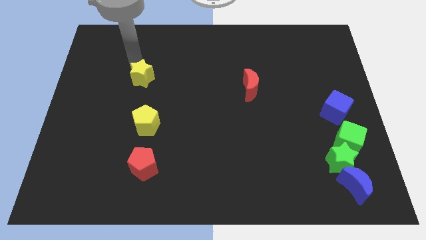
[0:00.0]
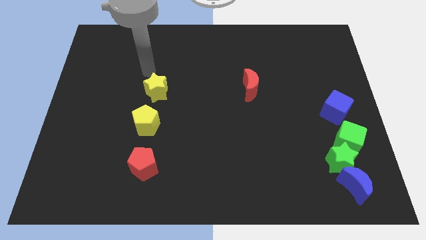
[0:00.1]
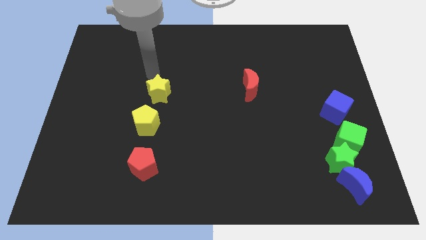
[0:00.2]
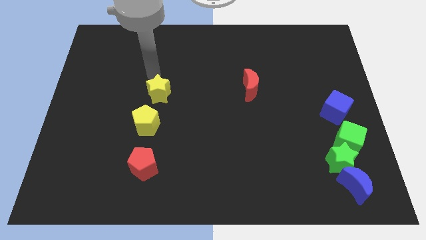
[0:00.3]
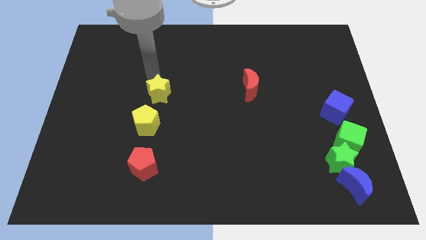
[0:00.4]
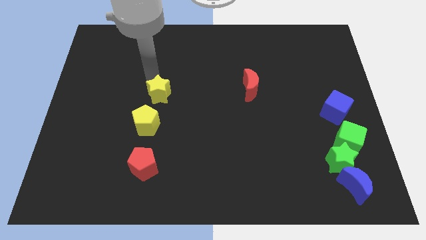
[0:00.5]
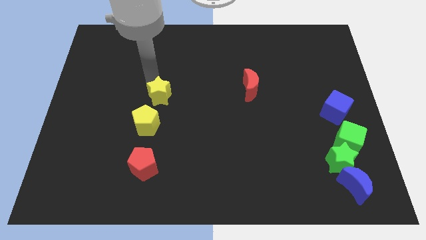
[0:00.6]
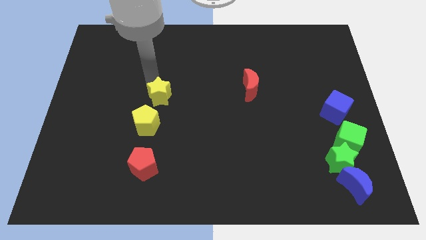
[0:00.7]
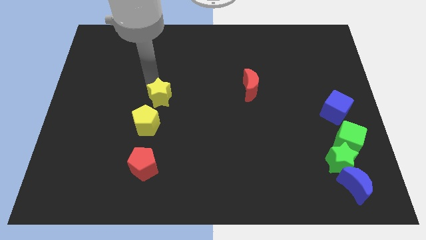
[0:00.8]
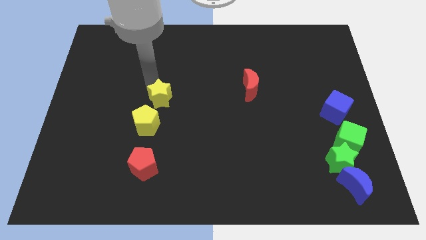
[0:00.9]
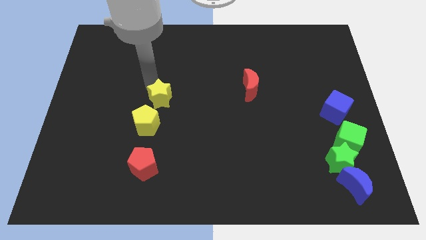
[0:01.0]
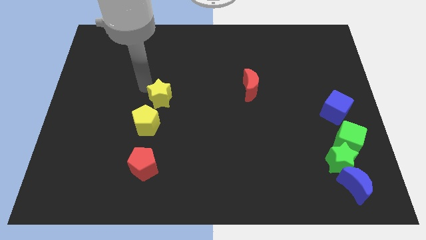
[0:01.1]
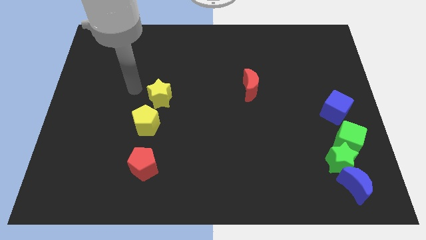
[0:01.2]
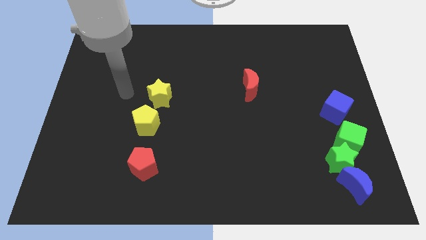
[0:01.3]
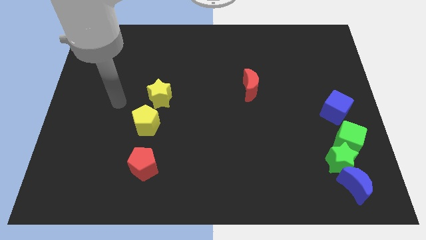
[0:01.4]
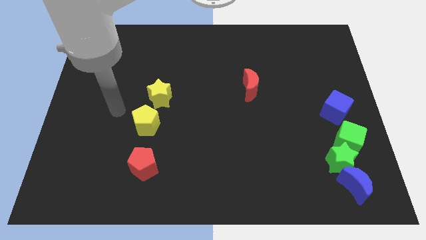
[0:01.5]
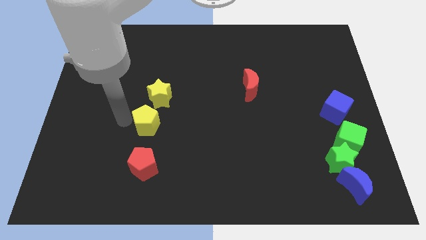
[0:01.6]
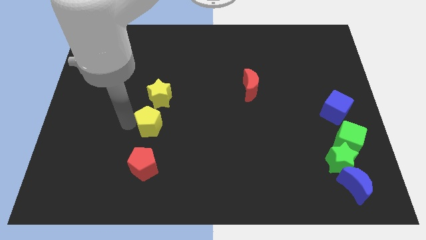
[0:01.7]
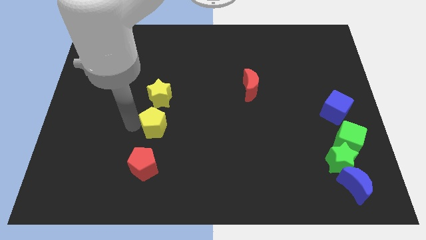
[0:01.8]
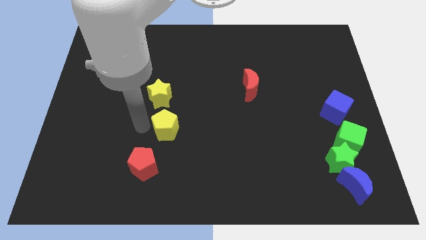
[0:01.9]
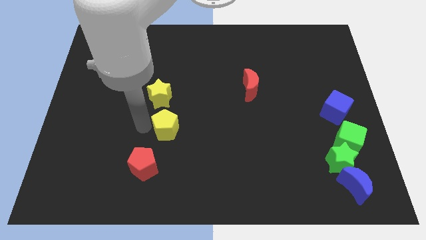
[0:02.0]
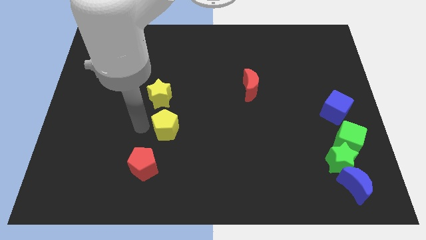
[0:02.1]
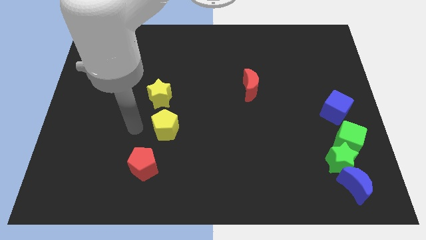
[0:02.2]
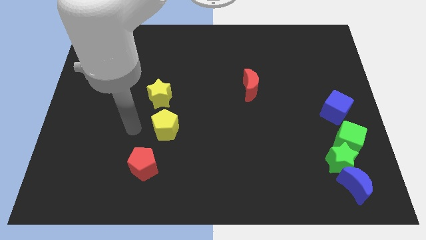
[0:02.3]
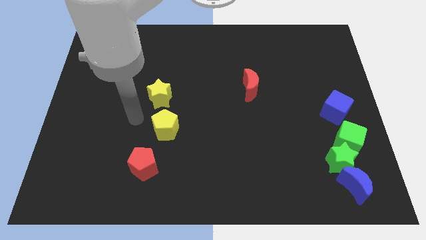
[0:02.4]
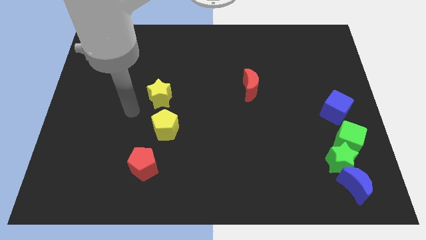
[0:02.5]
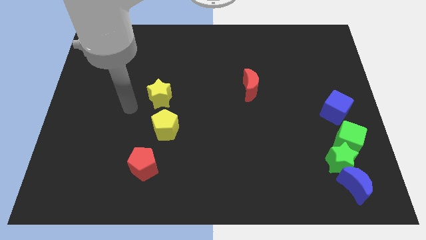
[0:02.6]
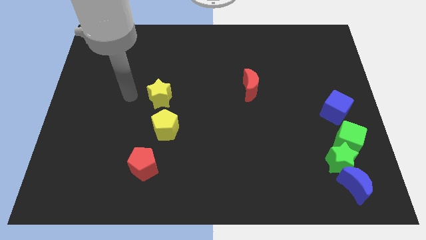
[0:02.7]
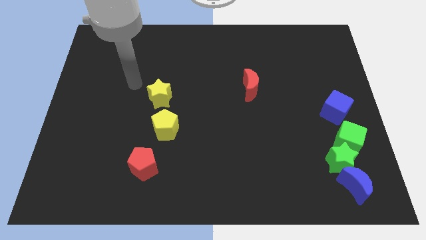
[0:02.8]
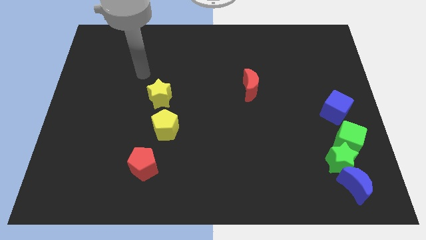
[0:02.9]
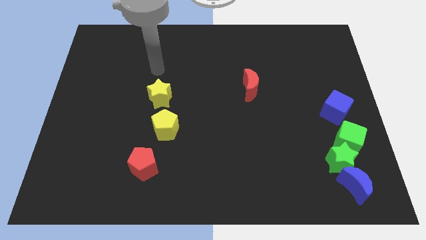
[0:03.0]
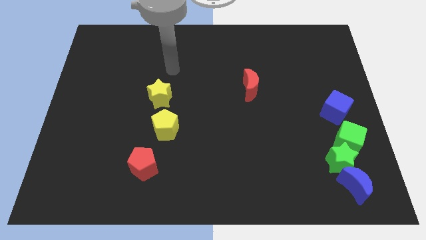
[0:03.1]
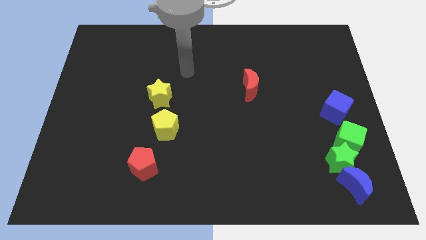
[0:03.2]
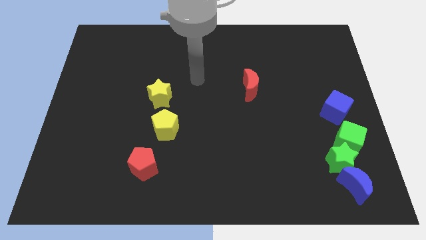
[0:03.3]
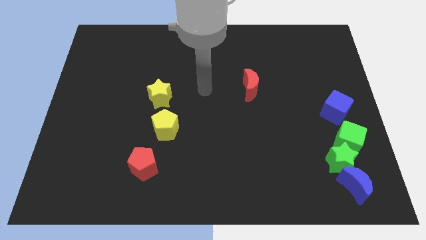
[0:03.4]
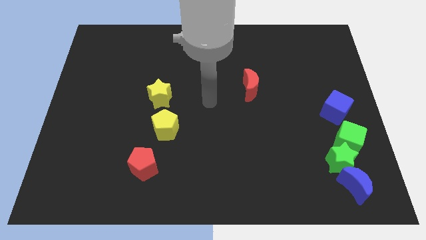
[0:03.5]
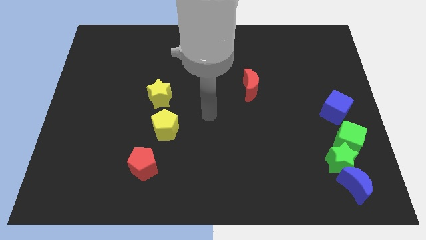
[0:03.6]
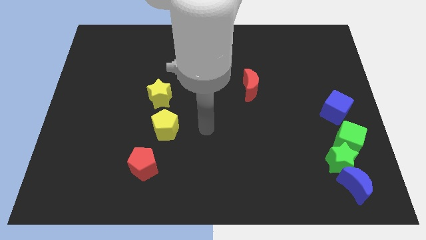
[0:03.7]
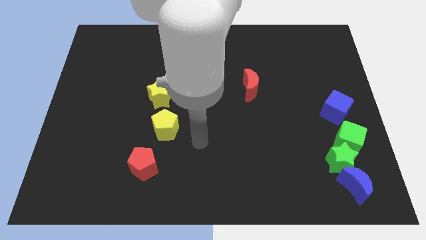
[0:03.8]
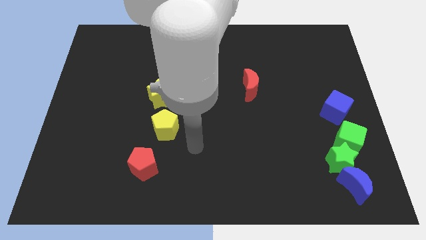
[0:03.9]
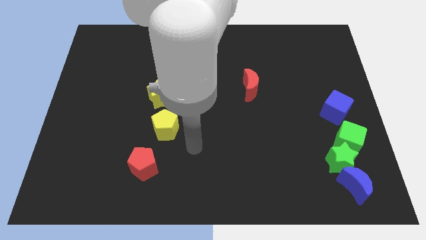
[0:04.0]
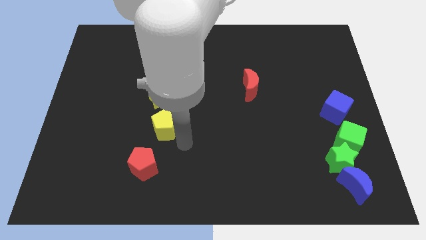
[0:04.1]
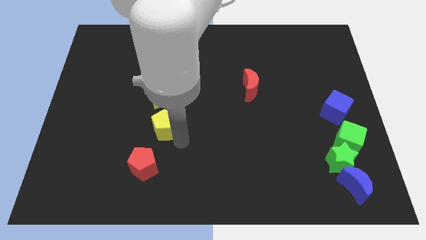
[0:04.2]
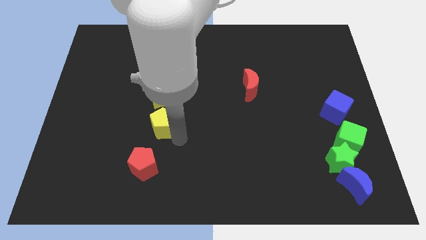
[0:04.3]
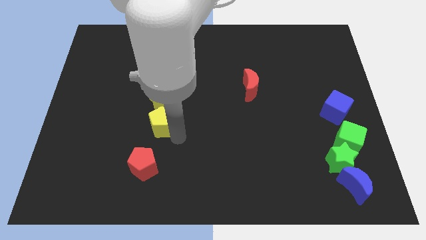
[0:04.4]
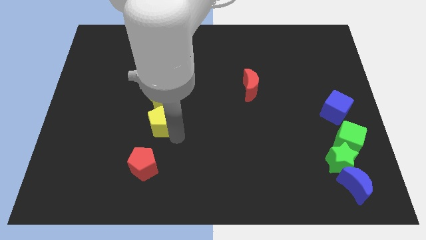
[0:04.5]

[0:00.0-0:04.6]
push yellow star above the yellow pentagon

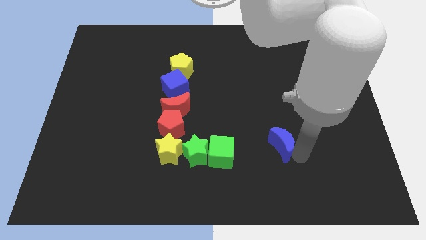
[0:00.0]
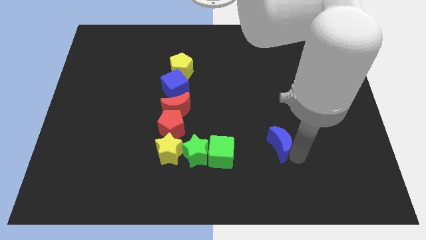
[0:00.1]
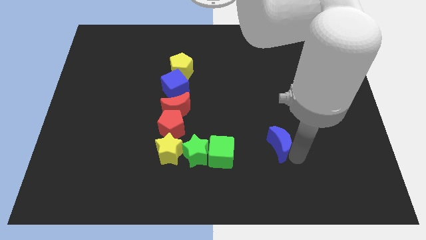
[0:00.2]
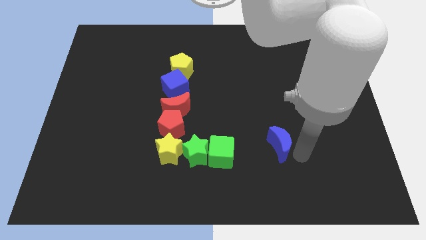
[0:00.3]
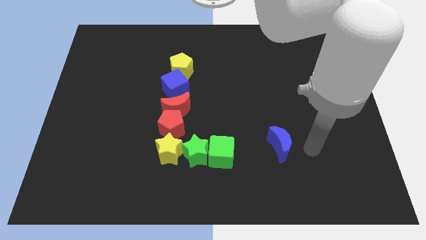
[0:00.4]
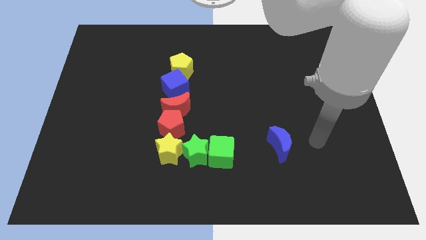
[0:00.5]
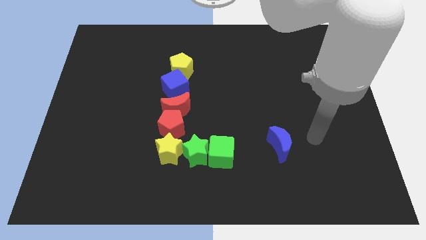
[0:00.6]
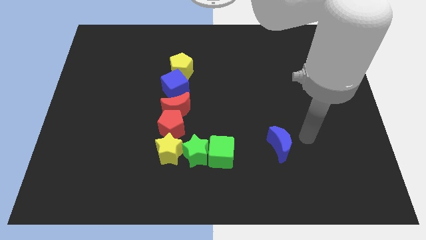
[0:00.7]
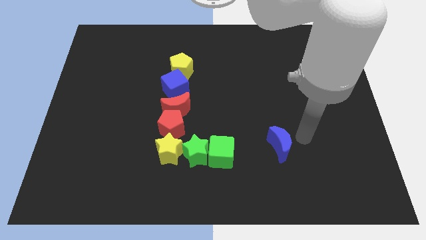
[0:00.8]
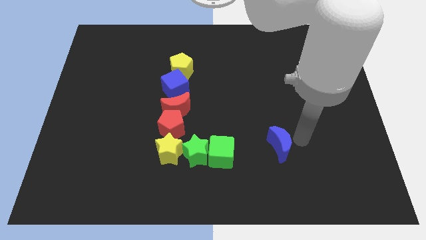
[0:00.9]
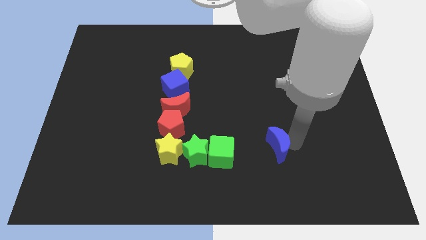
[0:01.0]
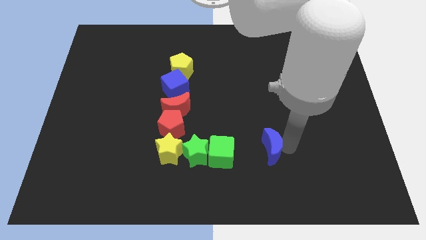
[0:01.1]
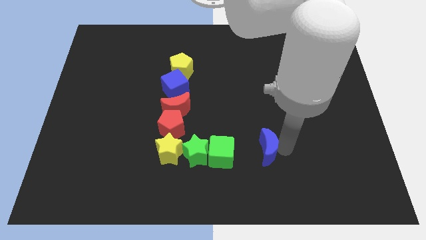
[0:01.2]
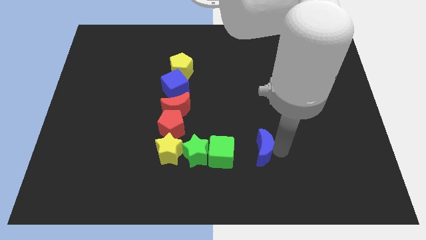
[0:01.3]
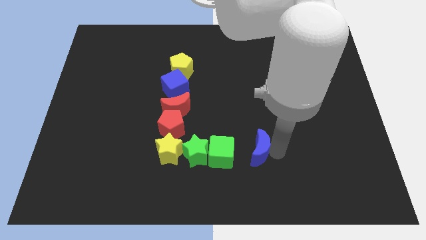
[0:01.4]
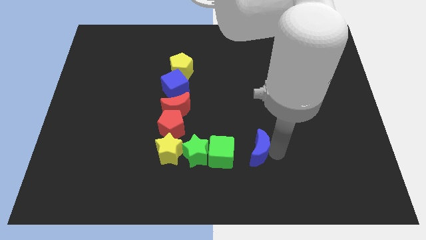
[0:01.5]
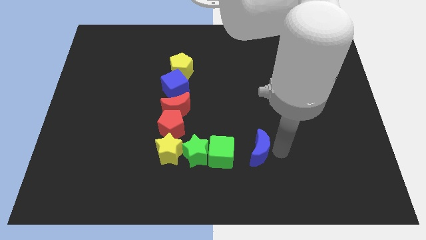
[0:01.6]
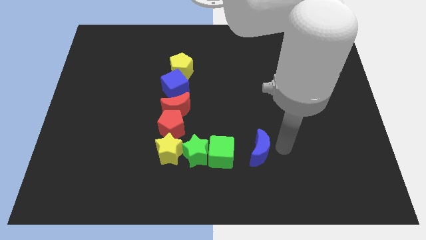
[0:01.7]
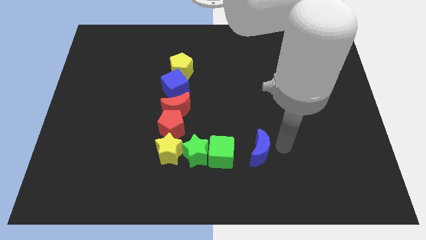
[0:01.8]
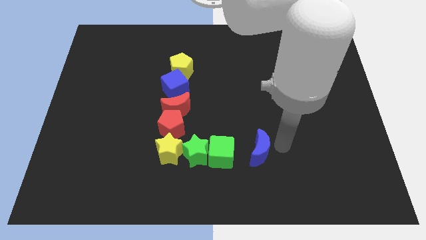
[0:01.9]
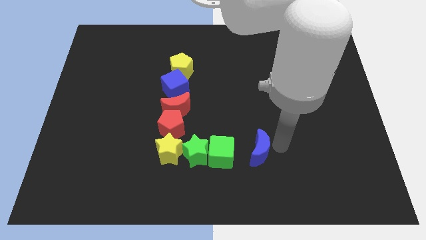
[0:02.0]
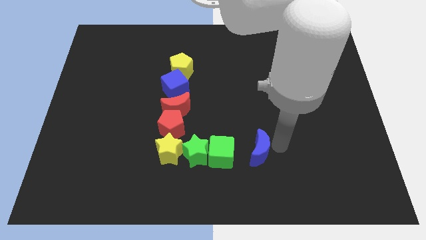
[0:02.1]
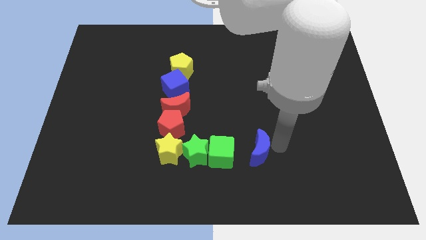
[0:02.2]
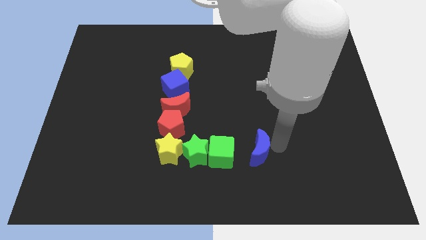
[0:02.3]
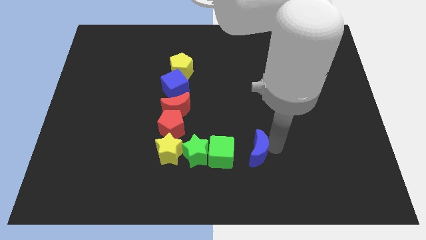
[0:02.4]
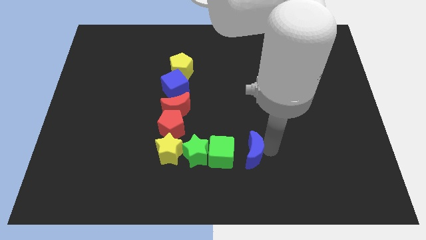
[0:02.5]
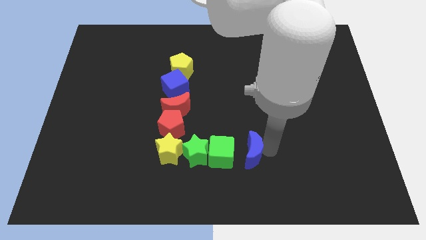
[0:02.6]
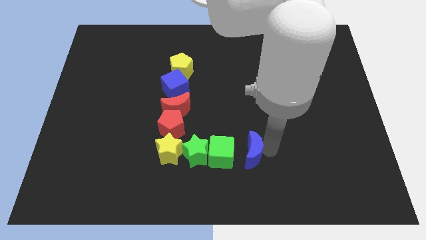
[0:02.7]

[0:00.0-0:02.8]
move the blue moon to the right of green cube

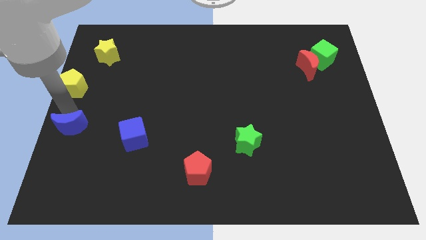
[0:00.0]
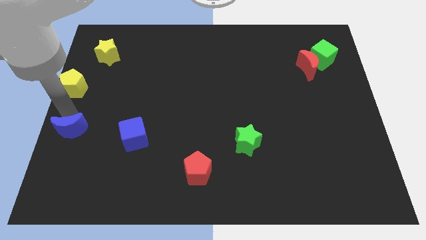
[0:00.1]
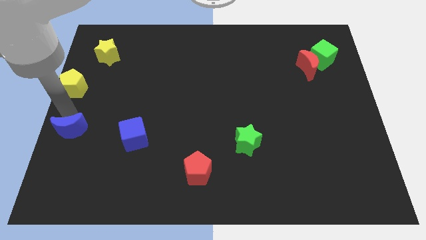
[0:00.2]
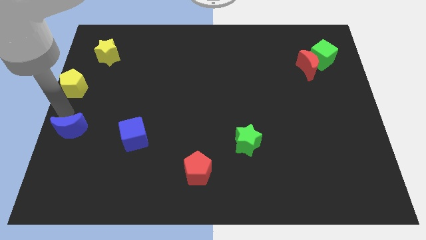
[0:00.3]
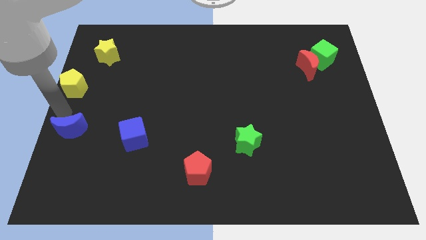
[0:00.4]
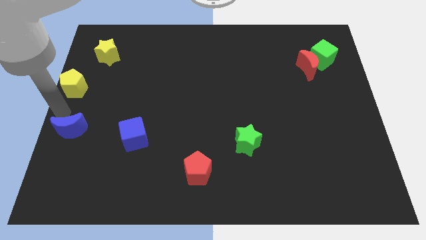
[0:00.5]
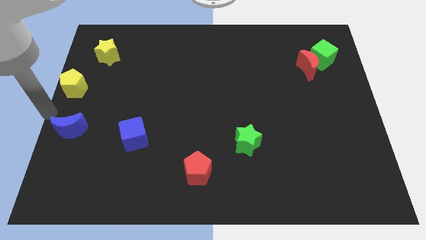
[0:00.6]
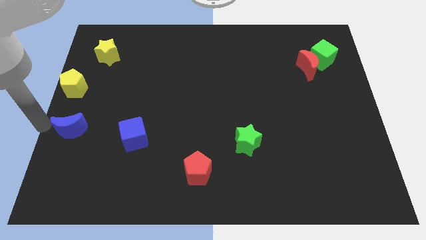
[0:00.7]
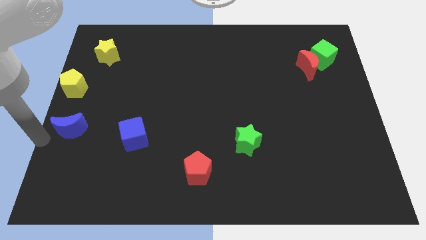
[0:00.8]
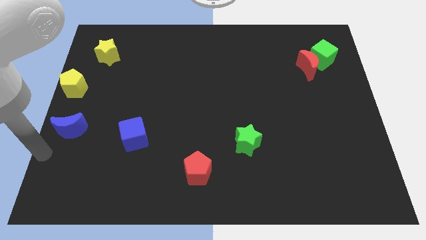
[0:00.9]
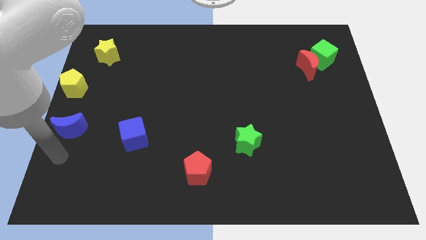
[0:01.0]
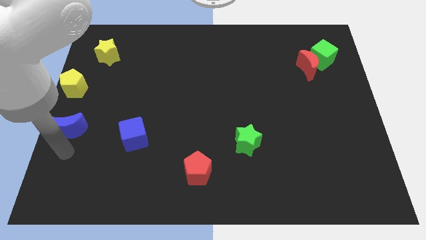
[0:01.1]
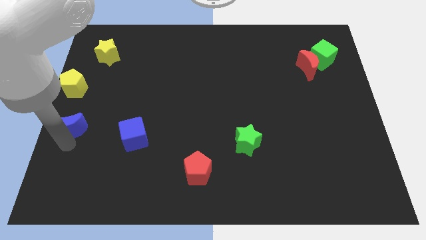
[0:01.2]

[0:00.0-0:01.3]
adjust the blue moon slightly

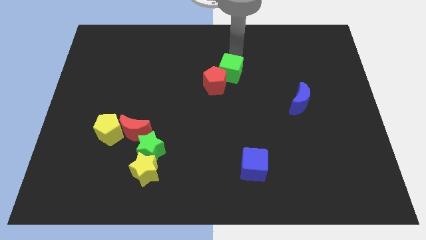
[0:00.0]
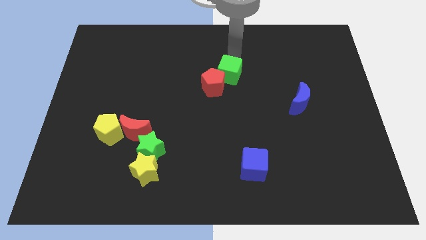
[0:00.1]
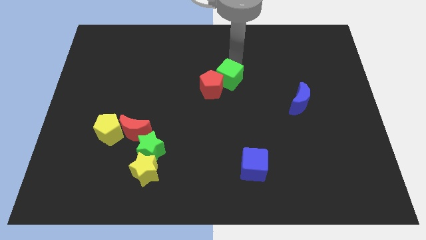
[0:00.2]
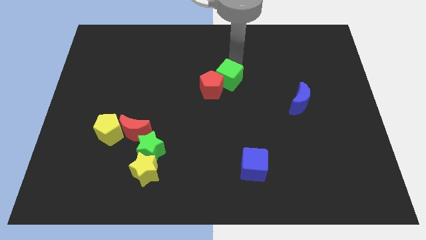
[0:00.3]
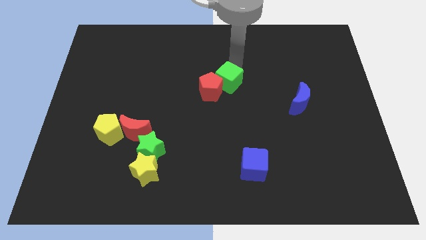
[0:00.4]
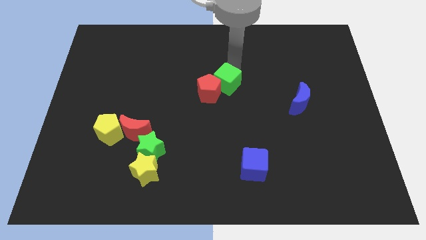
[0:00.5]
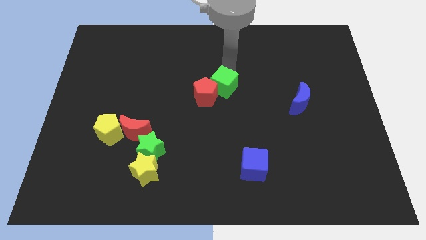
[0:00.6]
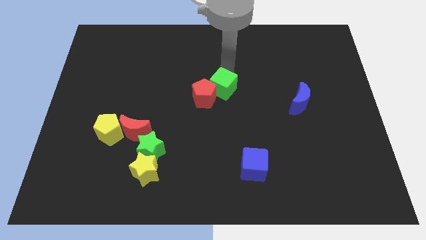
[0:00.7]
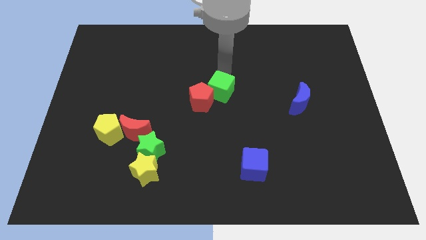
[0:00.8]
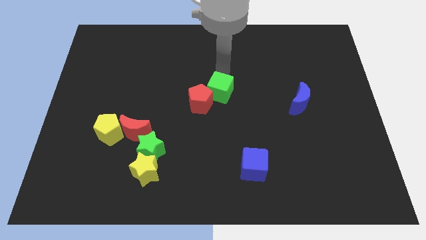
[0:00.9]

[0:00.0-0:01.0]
push green cube slightly towards down
